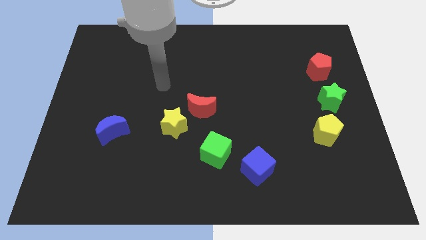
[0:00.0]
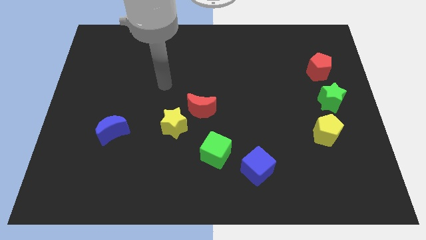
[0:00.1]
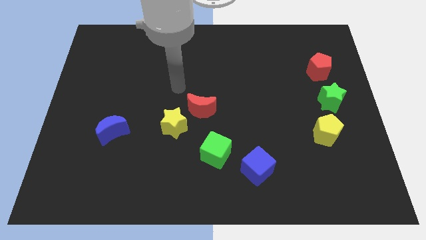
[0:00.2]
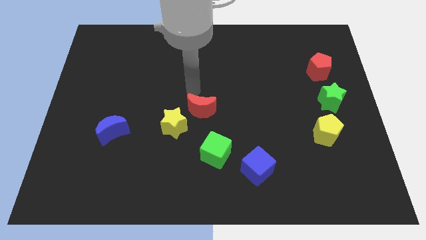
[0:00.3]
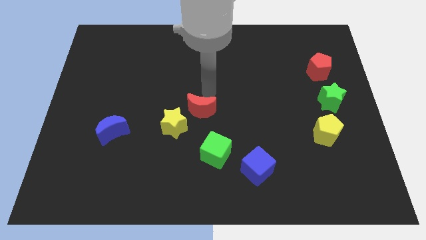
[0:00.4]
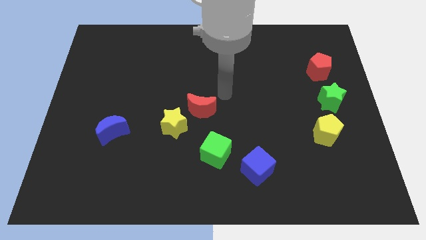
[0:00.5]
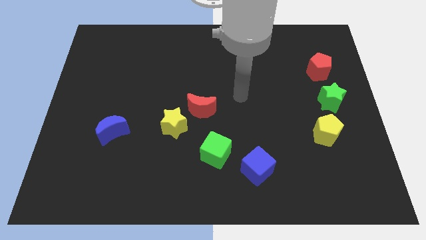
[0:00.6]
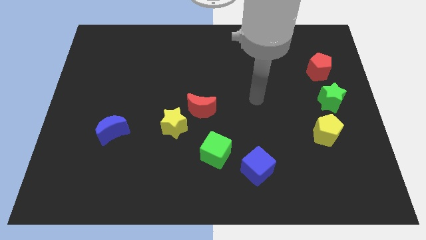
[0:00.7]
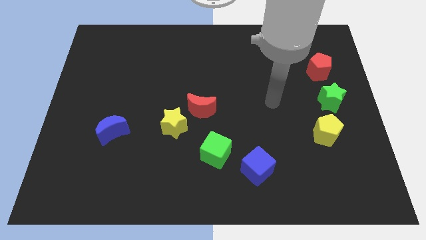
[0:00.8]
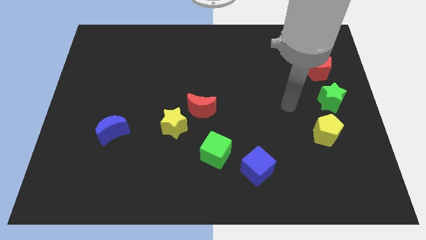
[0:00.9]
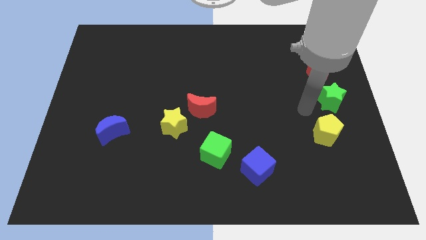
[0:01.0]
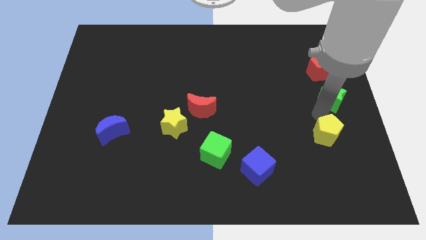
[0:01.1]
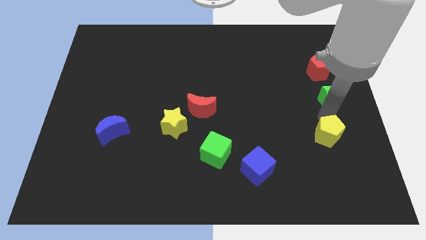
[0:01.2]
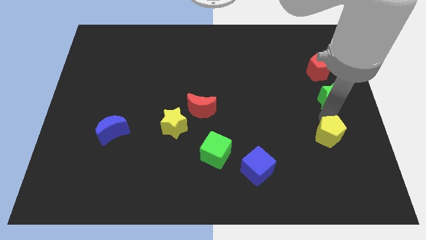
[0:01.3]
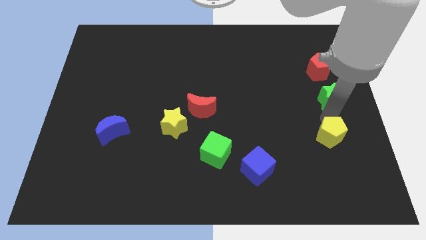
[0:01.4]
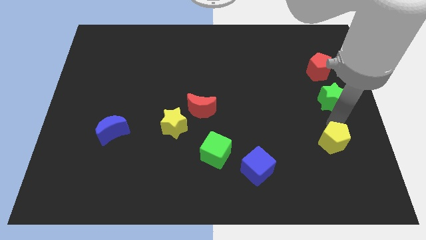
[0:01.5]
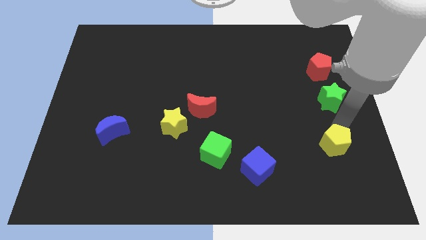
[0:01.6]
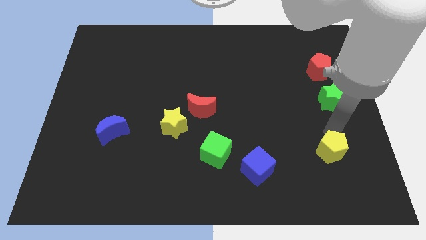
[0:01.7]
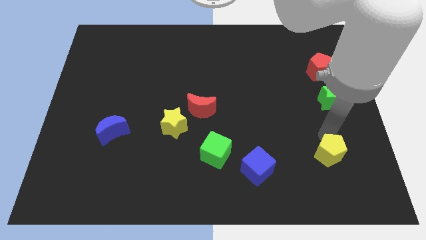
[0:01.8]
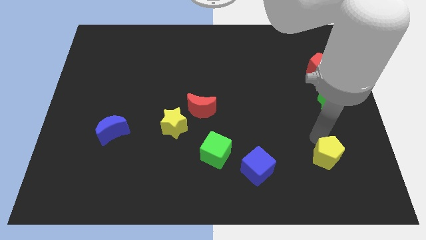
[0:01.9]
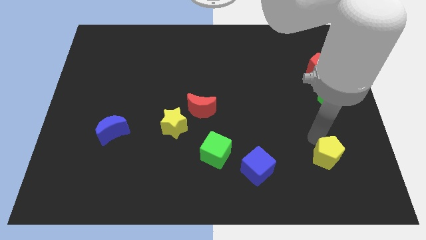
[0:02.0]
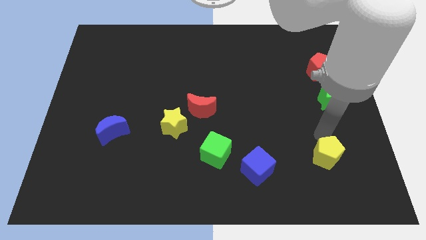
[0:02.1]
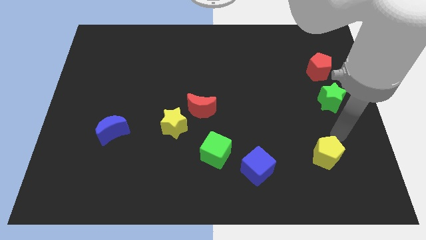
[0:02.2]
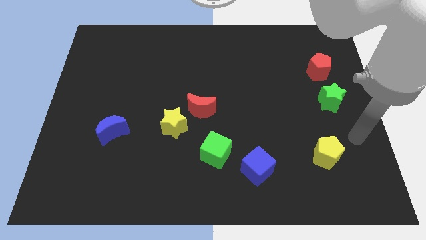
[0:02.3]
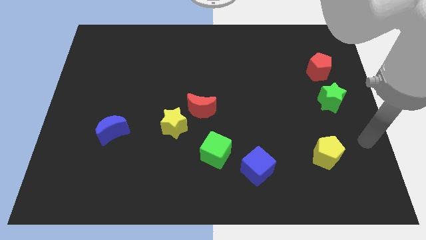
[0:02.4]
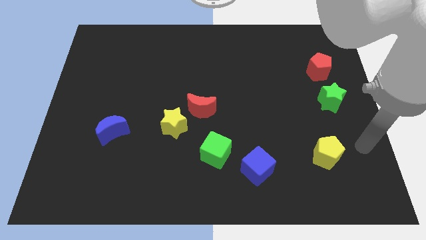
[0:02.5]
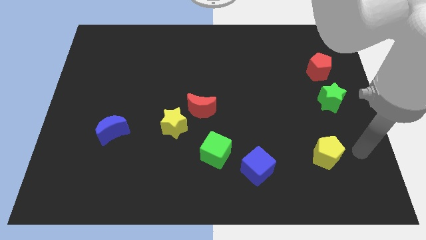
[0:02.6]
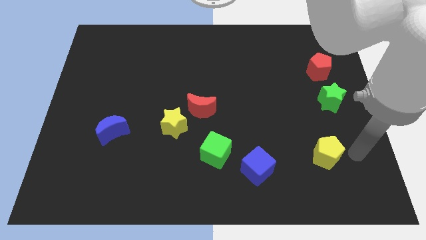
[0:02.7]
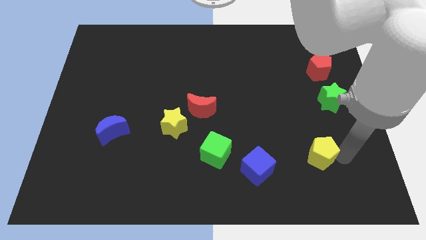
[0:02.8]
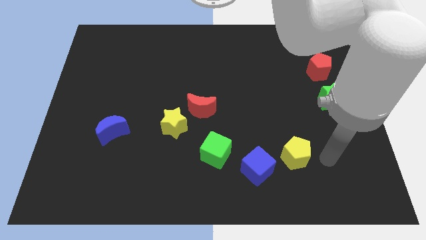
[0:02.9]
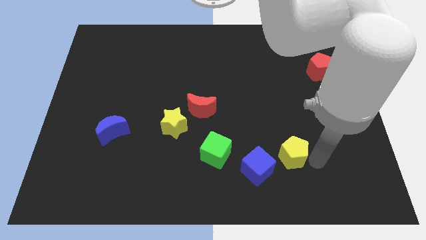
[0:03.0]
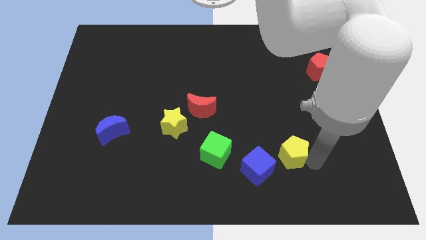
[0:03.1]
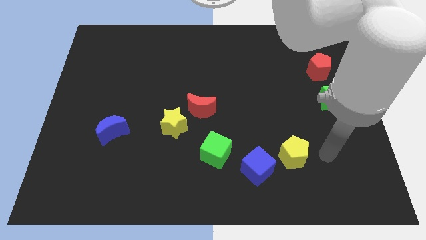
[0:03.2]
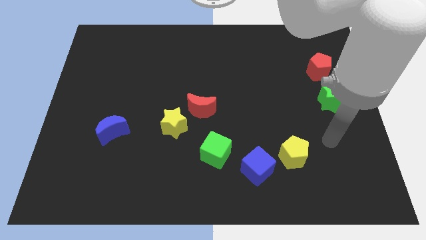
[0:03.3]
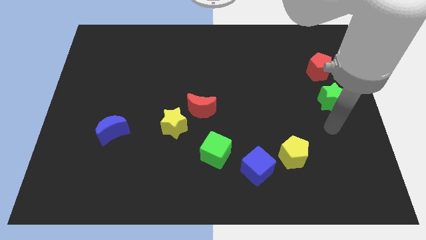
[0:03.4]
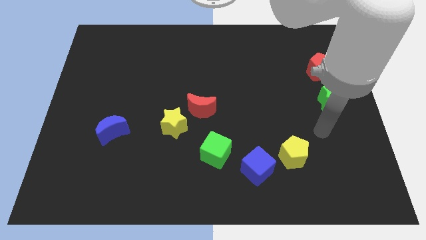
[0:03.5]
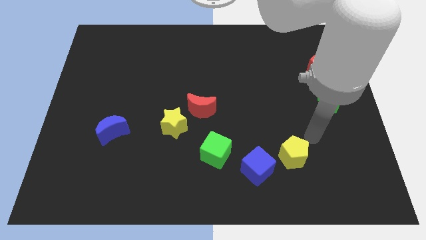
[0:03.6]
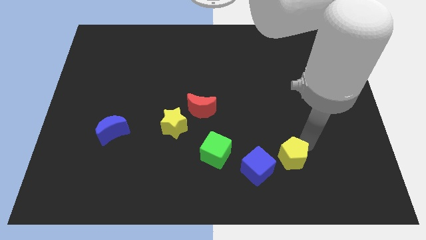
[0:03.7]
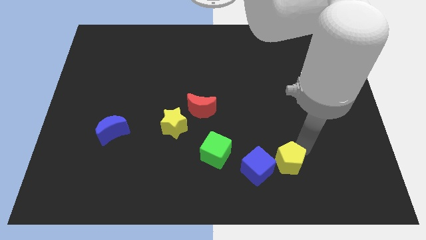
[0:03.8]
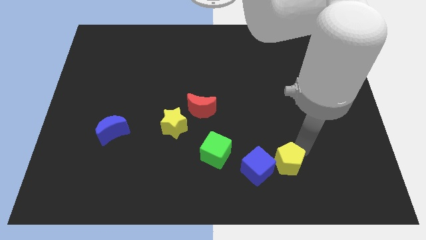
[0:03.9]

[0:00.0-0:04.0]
move the yellow pentagon close to the blue cube

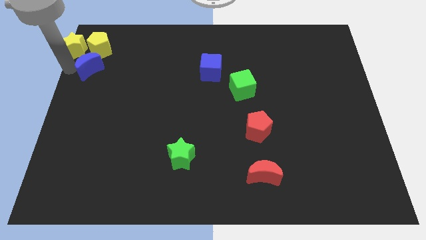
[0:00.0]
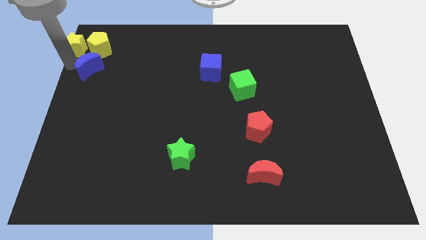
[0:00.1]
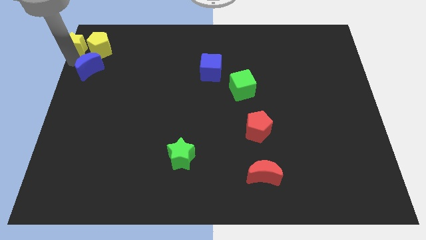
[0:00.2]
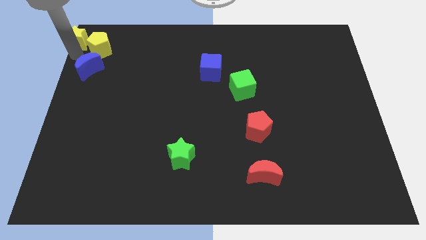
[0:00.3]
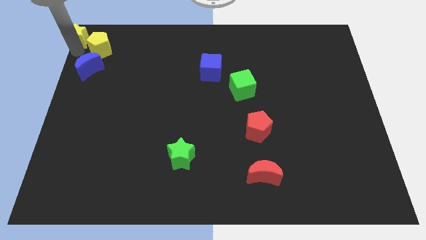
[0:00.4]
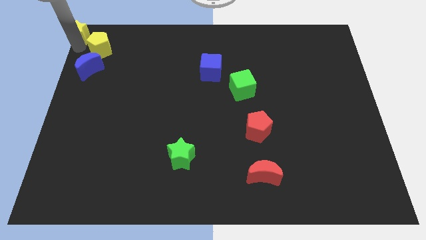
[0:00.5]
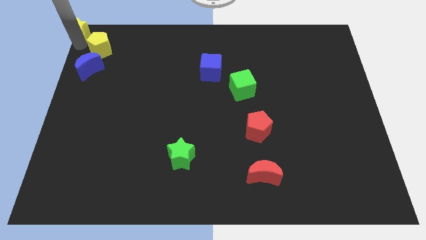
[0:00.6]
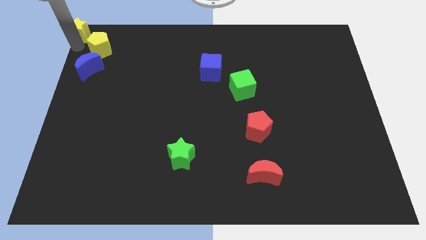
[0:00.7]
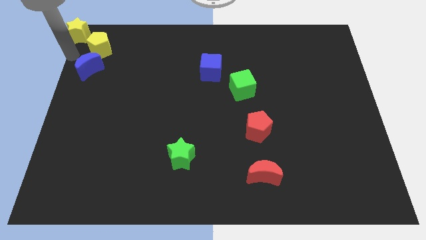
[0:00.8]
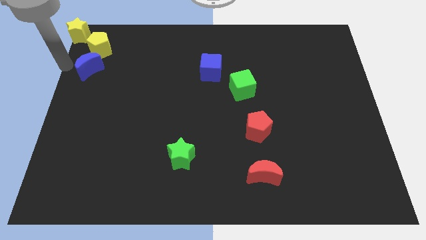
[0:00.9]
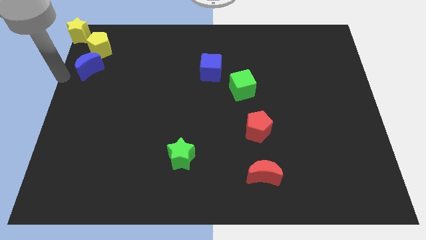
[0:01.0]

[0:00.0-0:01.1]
slide yellow star upwards

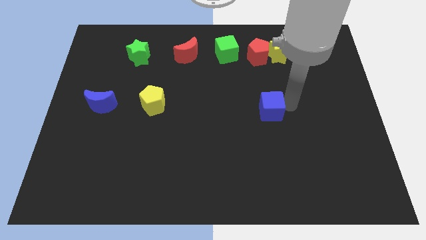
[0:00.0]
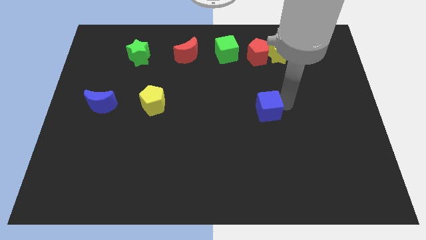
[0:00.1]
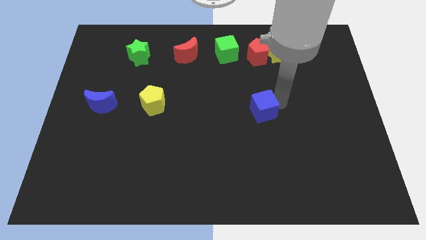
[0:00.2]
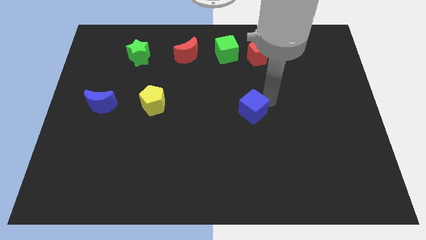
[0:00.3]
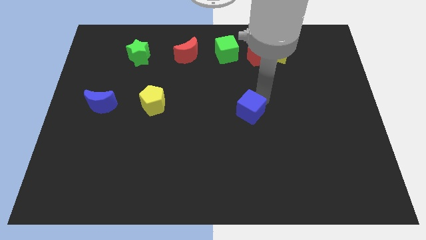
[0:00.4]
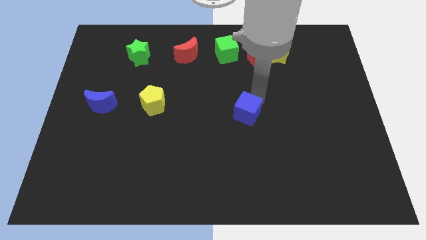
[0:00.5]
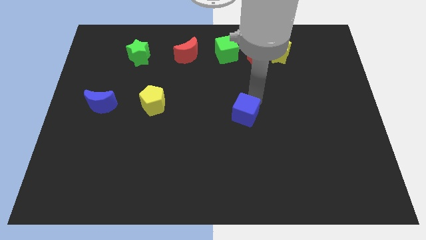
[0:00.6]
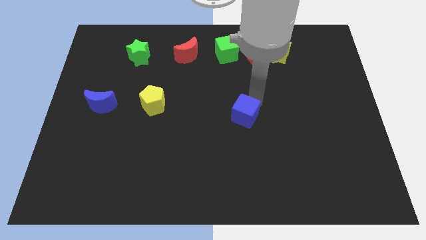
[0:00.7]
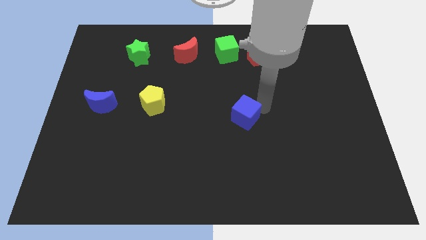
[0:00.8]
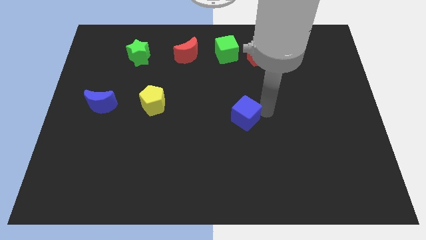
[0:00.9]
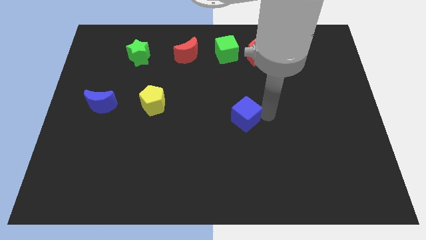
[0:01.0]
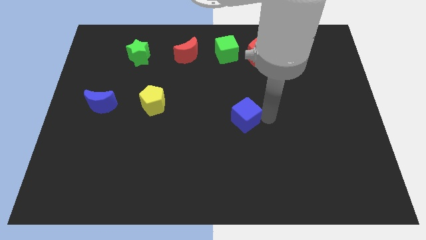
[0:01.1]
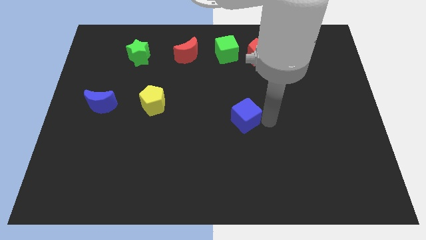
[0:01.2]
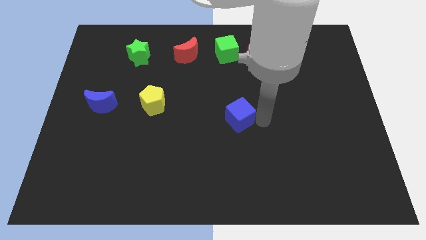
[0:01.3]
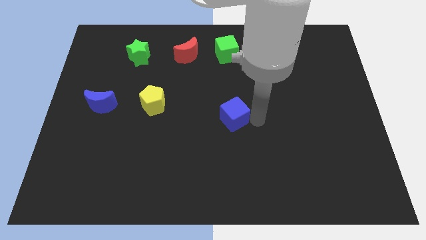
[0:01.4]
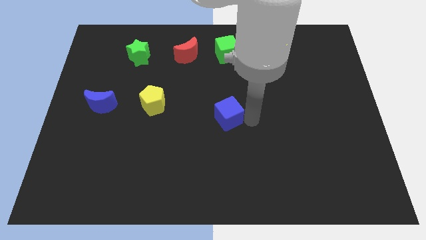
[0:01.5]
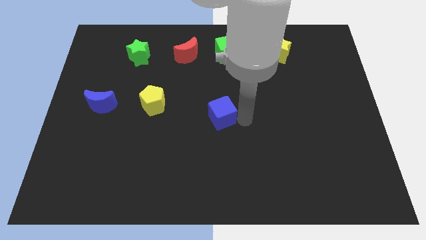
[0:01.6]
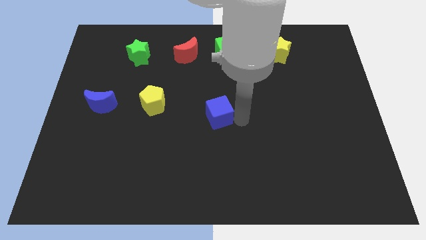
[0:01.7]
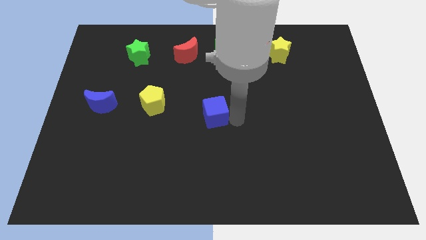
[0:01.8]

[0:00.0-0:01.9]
drag the blue moon towards the left side of the board

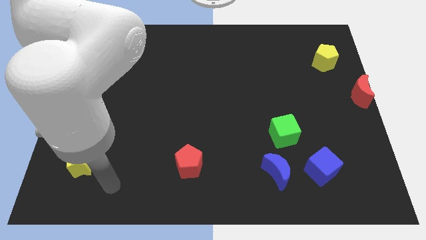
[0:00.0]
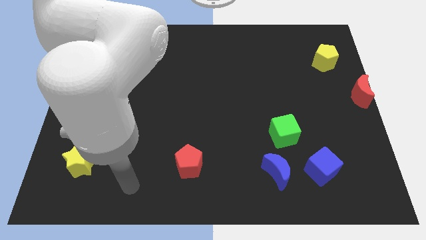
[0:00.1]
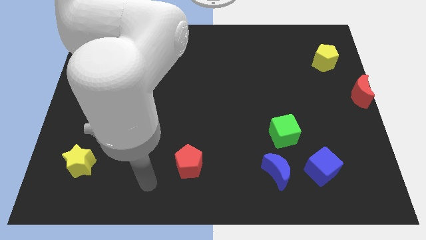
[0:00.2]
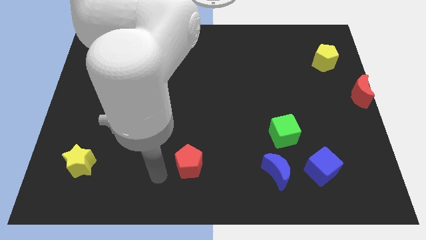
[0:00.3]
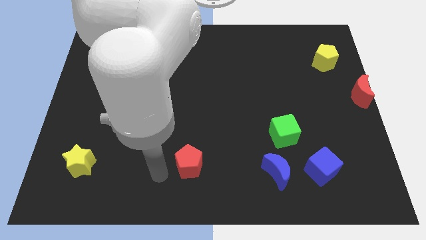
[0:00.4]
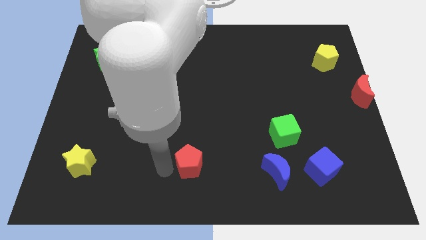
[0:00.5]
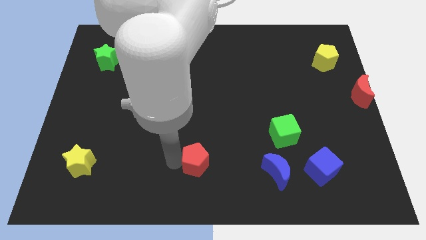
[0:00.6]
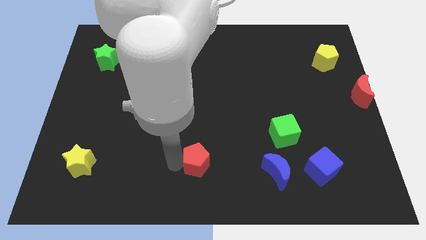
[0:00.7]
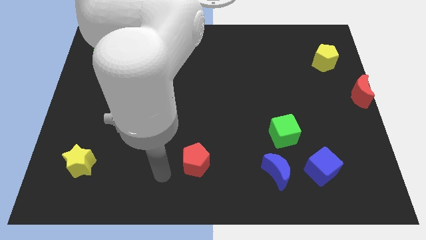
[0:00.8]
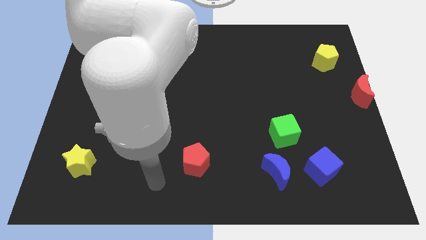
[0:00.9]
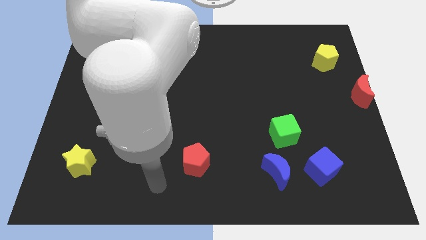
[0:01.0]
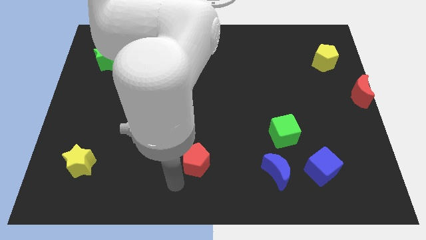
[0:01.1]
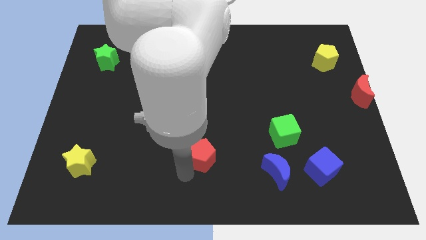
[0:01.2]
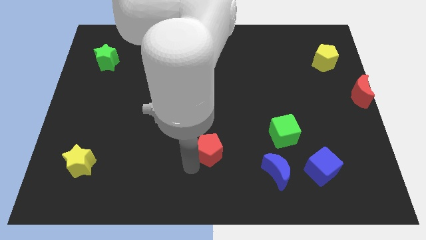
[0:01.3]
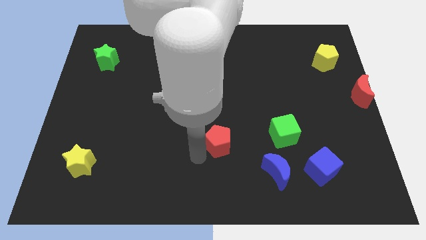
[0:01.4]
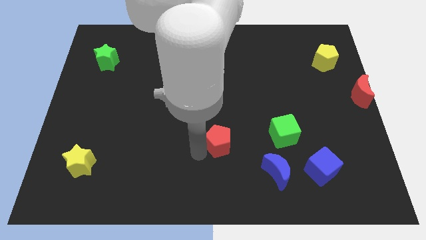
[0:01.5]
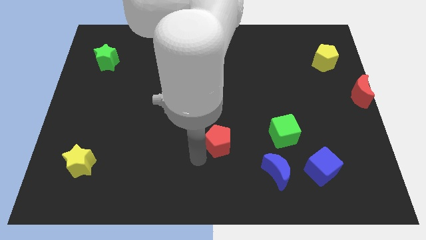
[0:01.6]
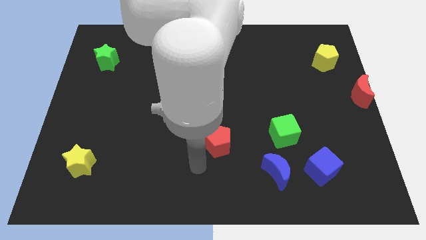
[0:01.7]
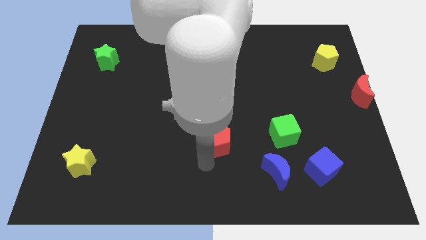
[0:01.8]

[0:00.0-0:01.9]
move the red pentagon towards top

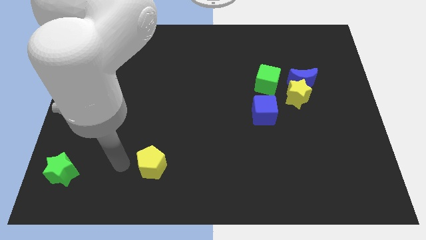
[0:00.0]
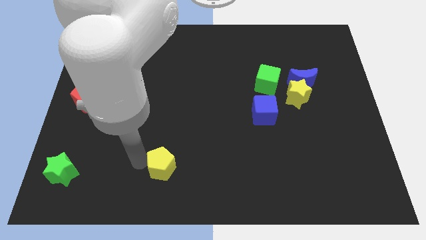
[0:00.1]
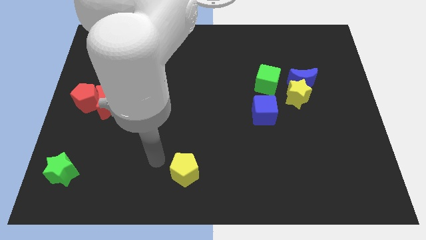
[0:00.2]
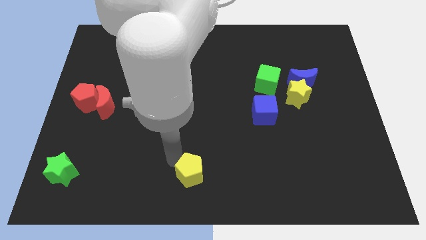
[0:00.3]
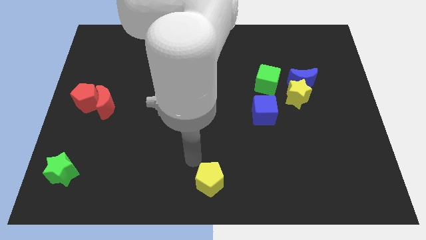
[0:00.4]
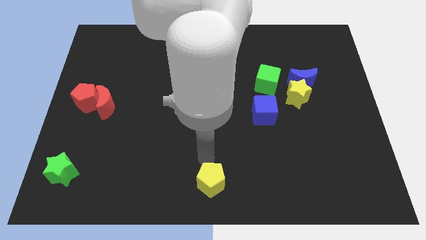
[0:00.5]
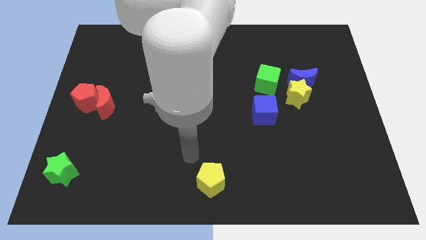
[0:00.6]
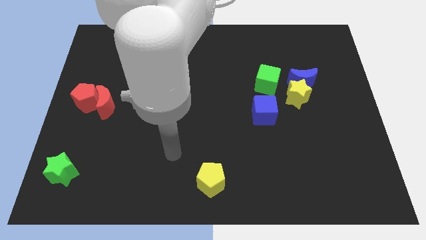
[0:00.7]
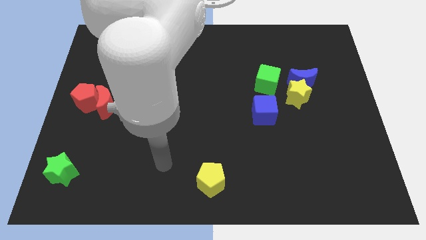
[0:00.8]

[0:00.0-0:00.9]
move the yellow pentagon diagonally to the left of the blue cube
